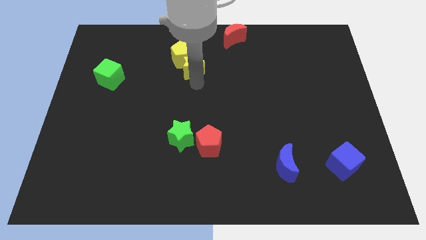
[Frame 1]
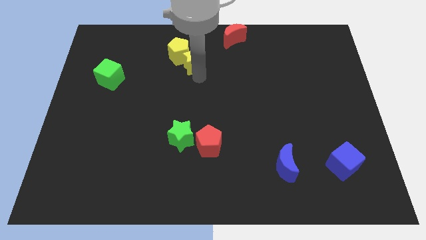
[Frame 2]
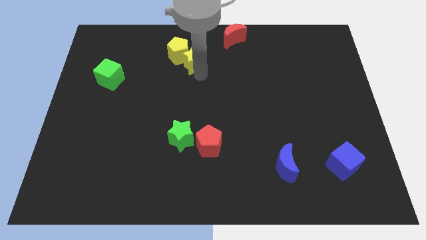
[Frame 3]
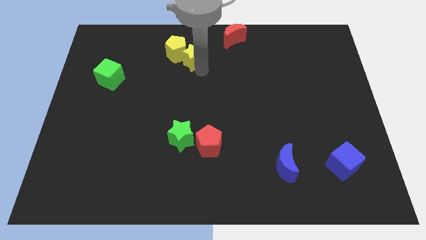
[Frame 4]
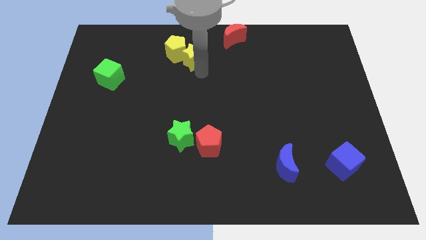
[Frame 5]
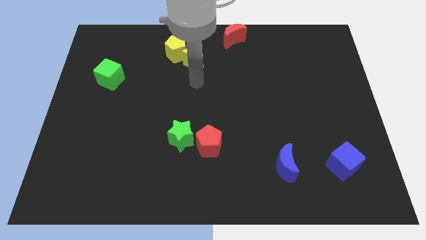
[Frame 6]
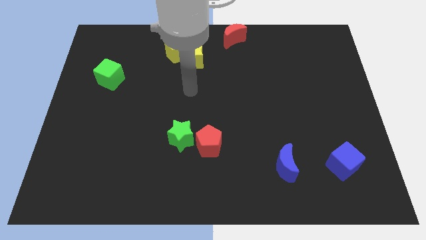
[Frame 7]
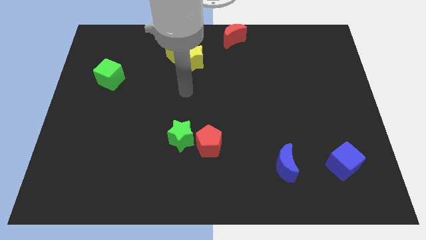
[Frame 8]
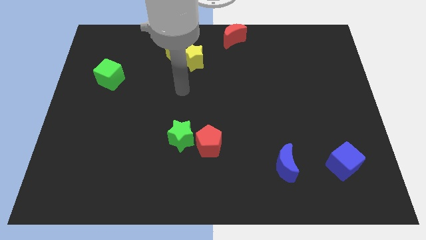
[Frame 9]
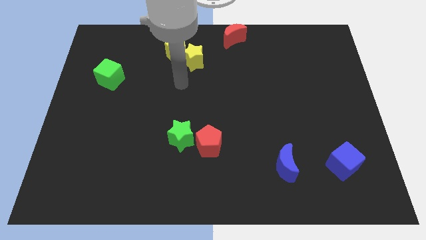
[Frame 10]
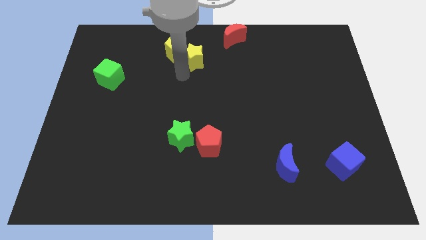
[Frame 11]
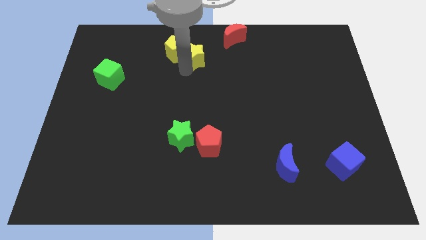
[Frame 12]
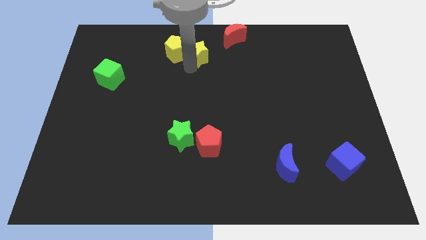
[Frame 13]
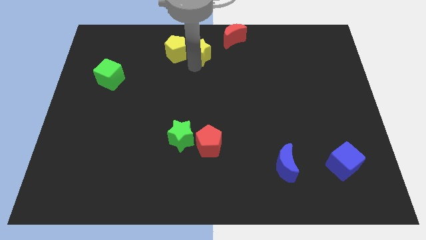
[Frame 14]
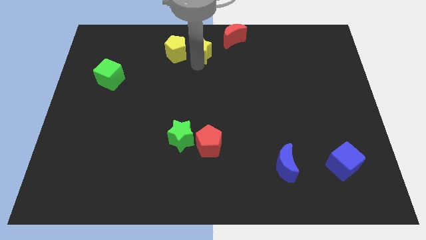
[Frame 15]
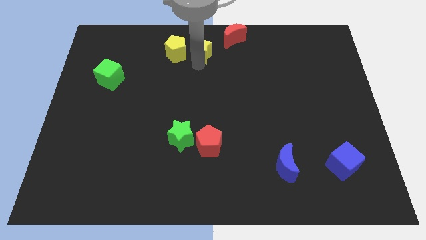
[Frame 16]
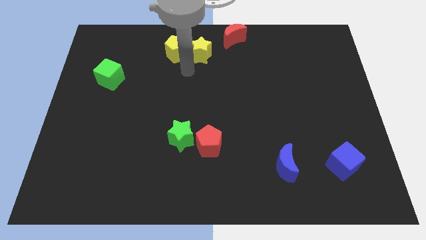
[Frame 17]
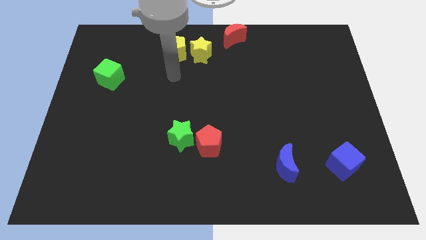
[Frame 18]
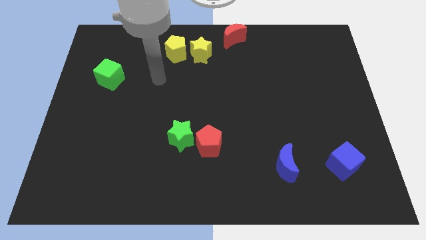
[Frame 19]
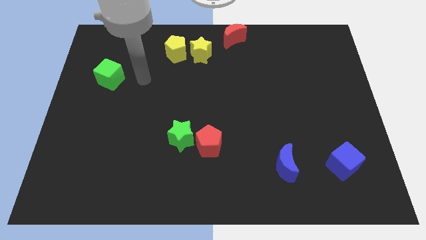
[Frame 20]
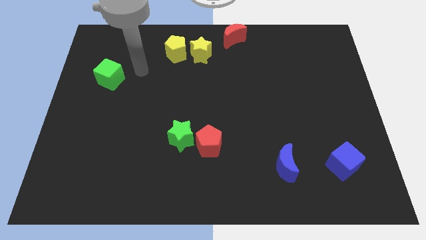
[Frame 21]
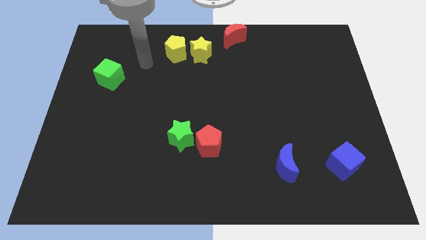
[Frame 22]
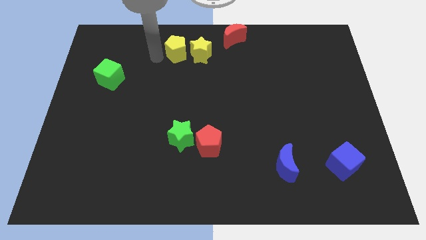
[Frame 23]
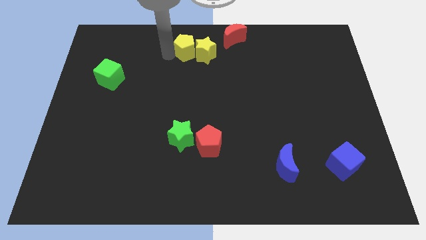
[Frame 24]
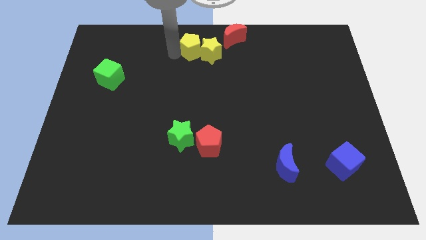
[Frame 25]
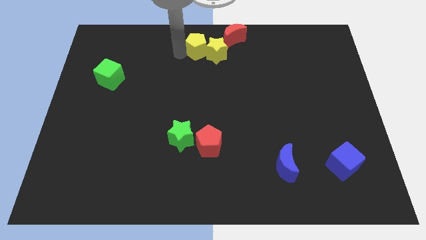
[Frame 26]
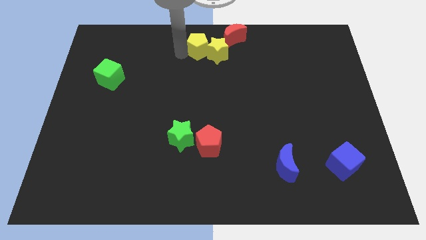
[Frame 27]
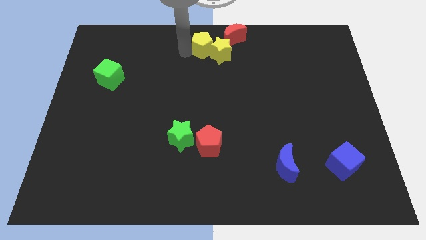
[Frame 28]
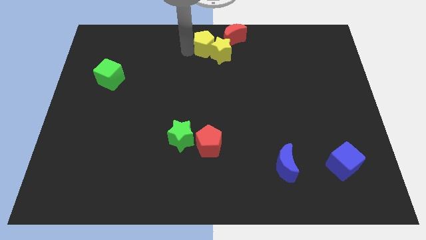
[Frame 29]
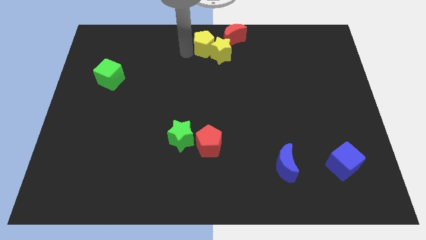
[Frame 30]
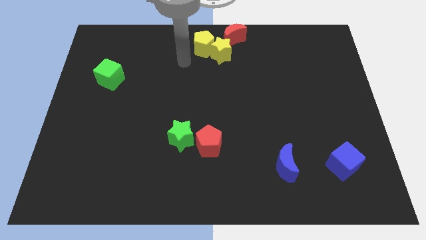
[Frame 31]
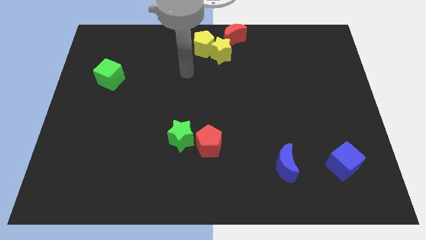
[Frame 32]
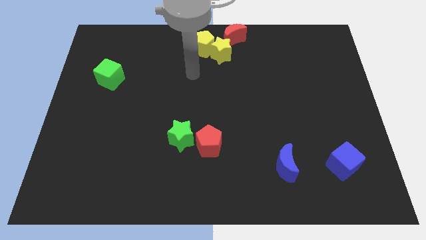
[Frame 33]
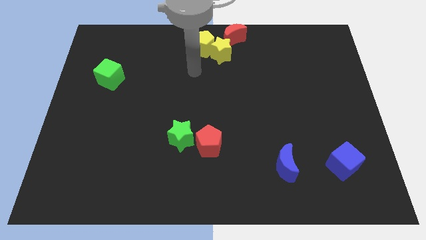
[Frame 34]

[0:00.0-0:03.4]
move the yellow blocks close to the red moon

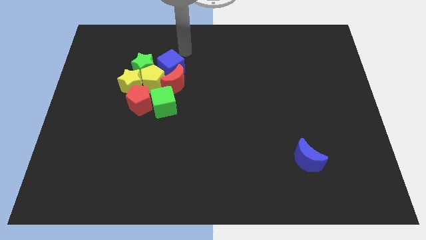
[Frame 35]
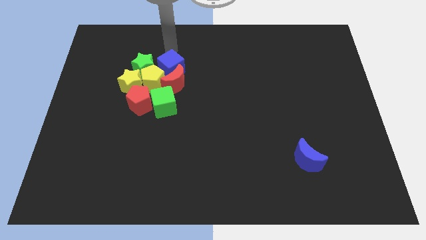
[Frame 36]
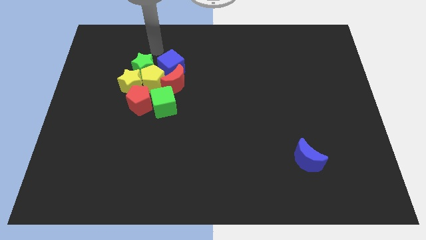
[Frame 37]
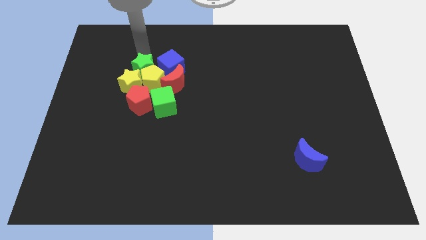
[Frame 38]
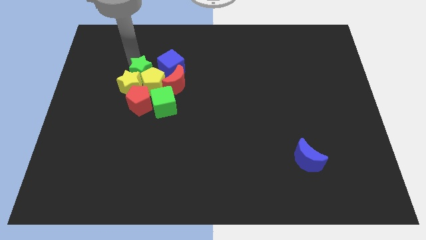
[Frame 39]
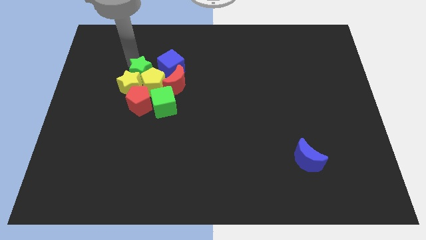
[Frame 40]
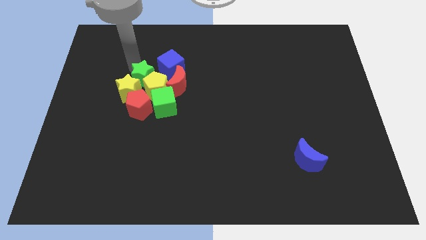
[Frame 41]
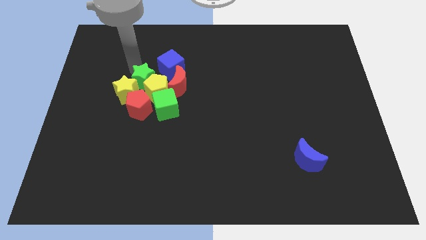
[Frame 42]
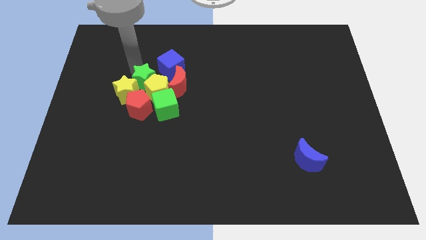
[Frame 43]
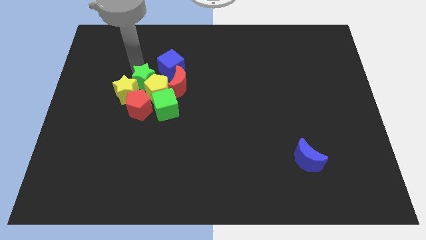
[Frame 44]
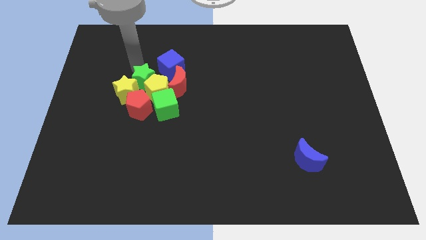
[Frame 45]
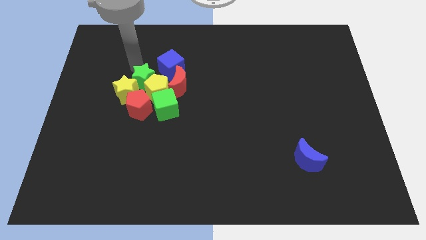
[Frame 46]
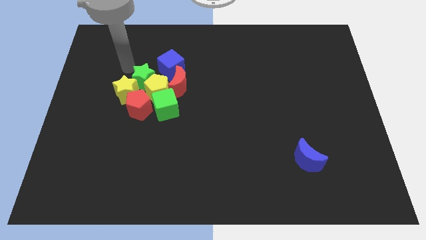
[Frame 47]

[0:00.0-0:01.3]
push the green star slightly into yellow pentagon

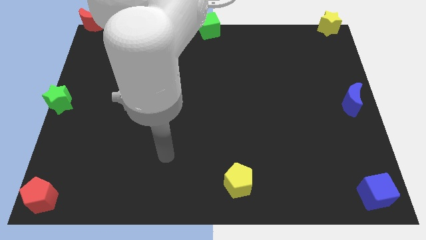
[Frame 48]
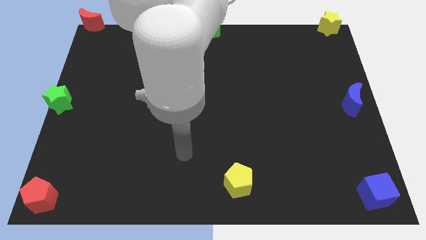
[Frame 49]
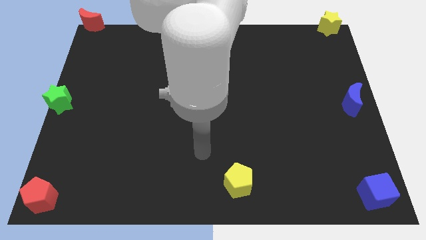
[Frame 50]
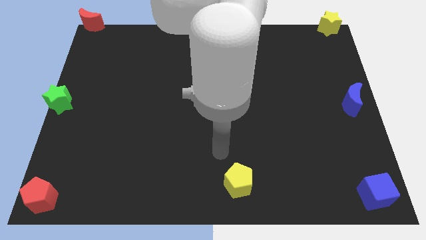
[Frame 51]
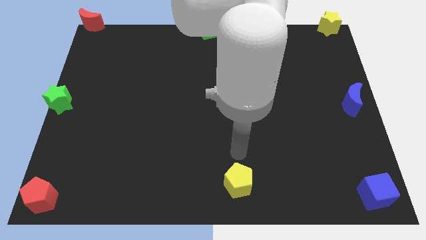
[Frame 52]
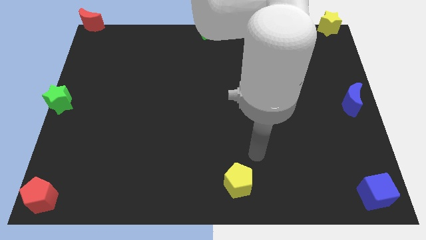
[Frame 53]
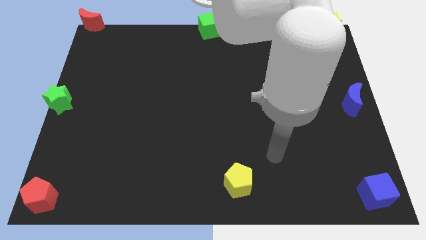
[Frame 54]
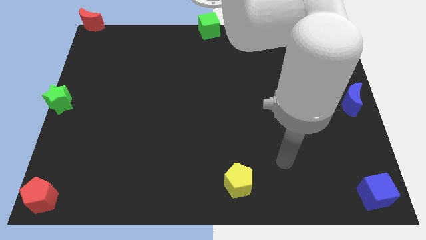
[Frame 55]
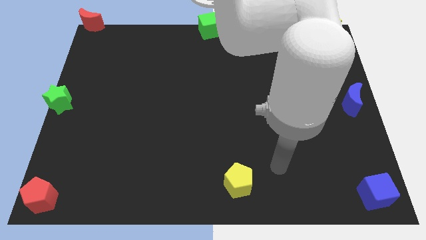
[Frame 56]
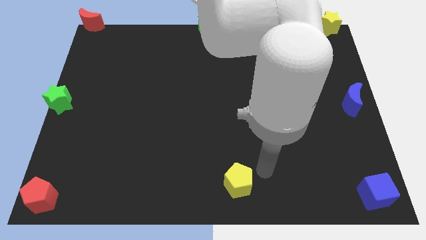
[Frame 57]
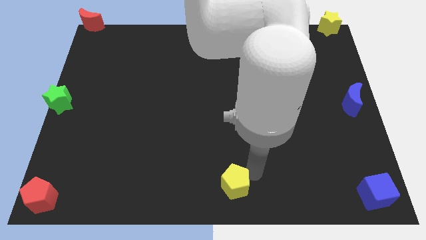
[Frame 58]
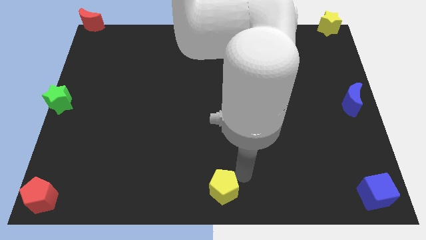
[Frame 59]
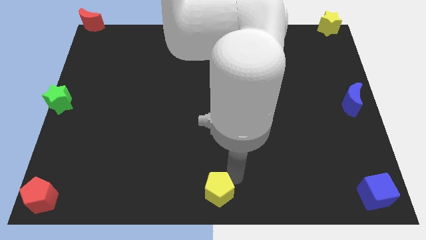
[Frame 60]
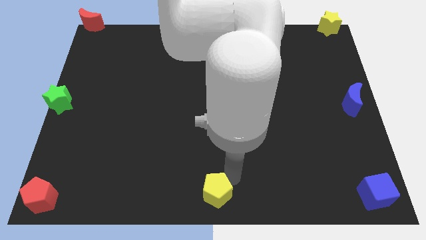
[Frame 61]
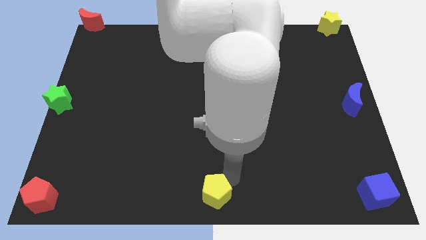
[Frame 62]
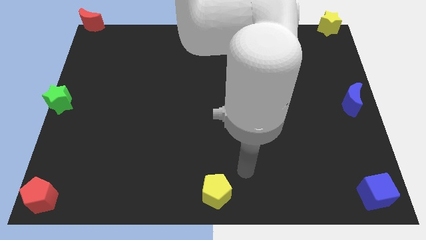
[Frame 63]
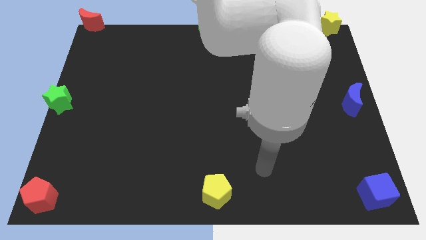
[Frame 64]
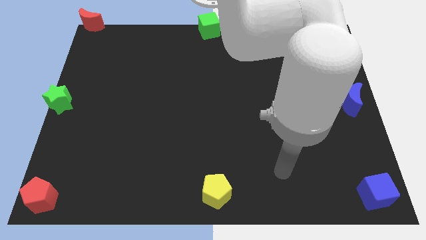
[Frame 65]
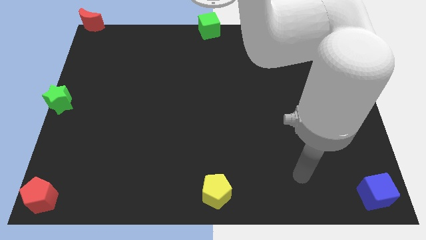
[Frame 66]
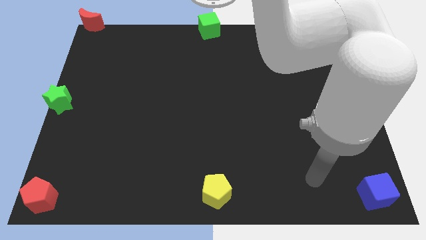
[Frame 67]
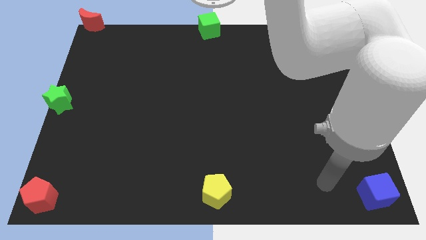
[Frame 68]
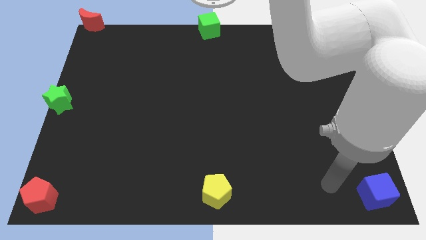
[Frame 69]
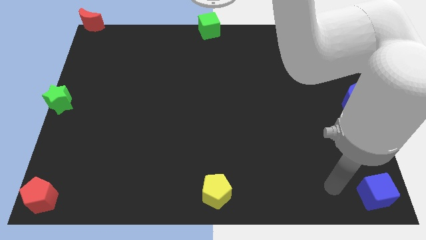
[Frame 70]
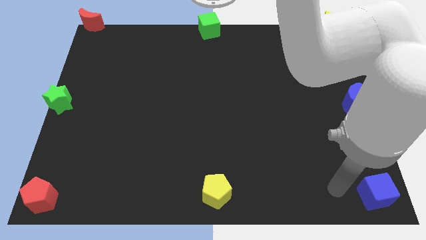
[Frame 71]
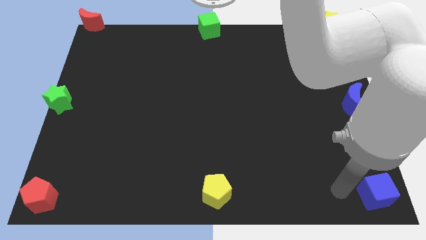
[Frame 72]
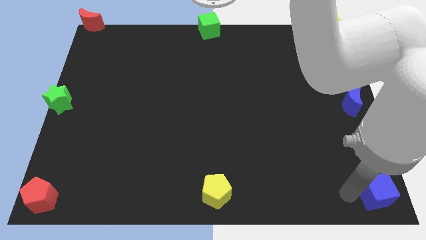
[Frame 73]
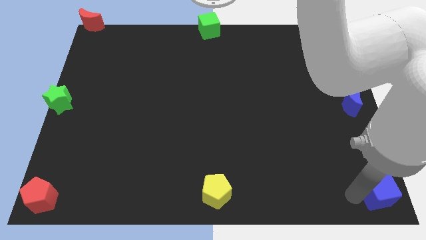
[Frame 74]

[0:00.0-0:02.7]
slightly move the yellow pentagon to the bottom center of the board

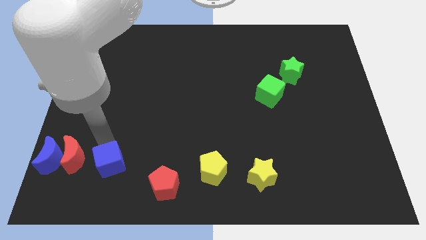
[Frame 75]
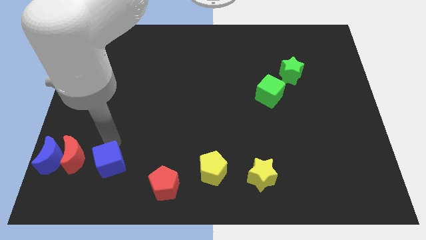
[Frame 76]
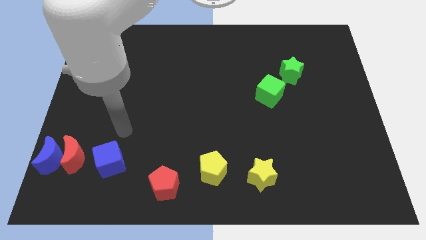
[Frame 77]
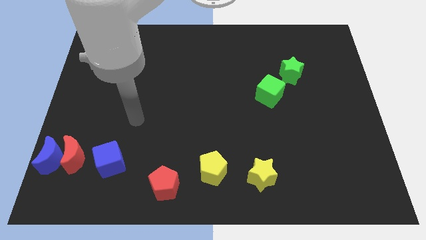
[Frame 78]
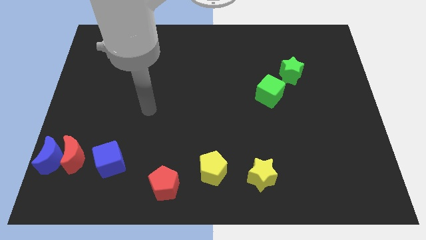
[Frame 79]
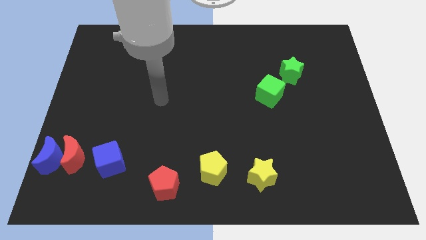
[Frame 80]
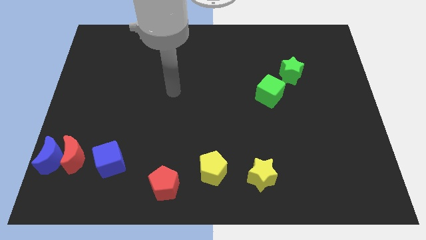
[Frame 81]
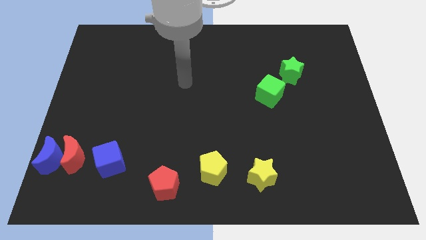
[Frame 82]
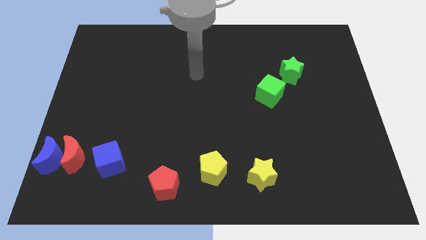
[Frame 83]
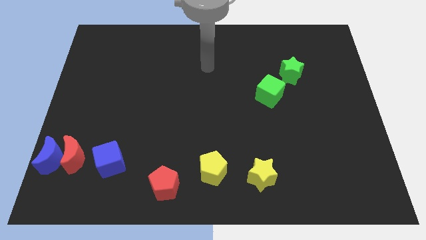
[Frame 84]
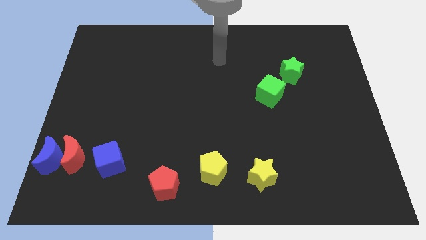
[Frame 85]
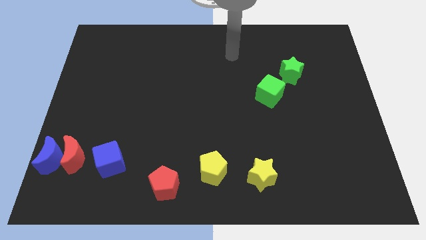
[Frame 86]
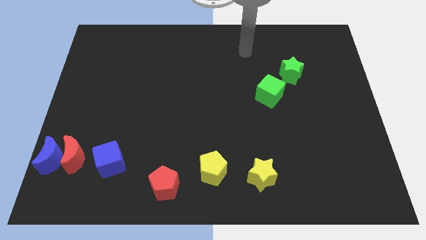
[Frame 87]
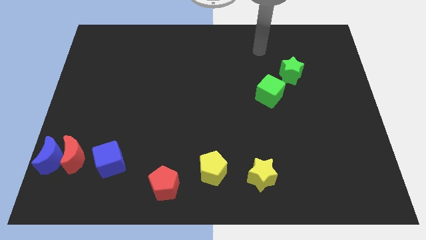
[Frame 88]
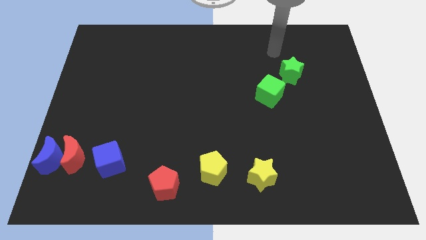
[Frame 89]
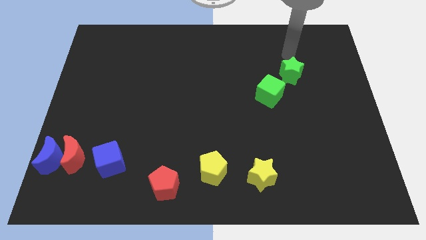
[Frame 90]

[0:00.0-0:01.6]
move the arm away from the blue cube
